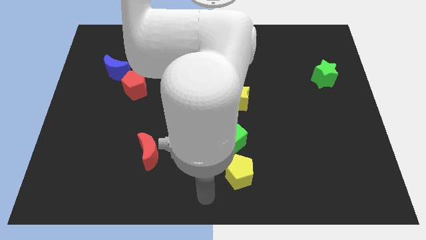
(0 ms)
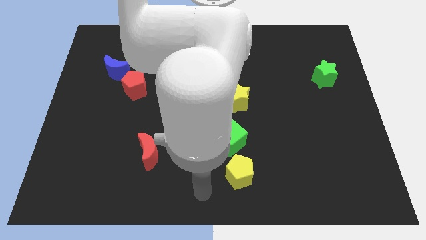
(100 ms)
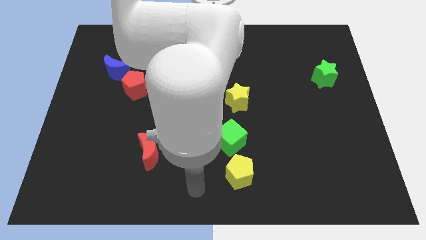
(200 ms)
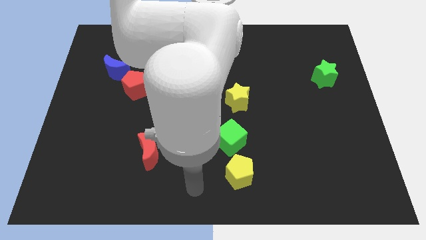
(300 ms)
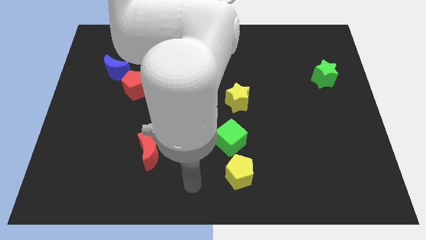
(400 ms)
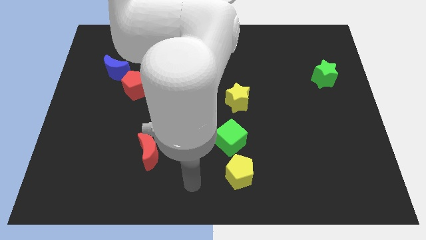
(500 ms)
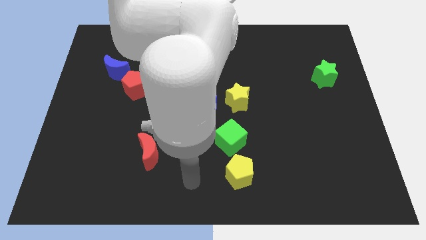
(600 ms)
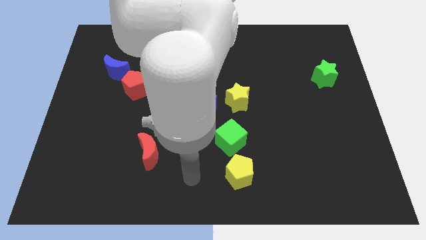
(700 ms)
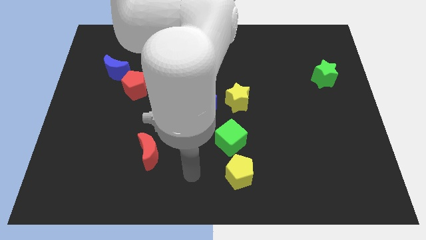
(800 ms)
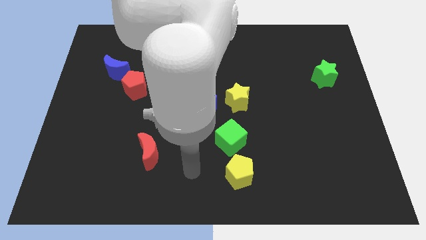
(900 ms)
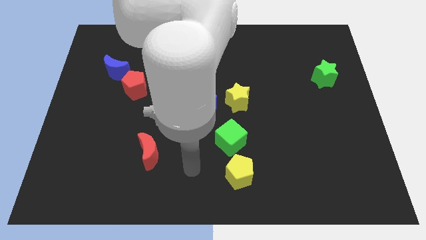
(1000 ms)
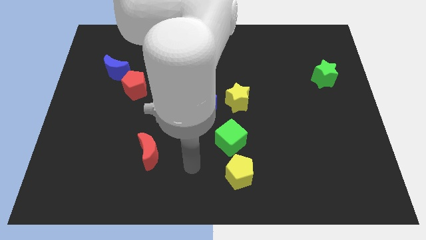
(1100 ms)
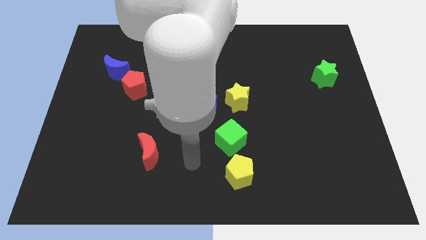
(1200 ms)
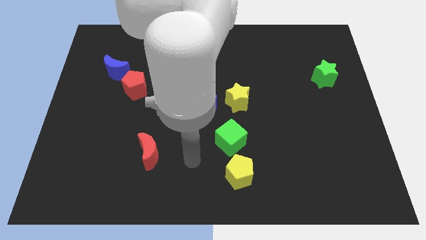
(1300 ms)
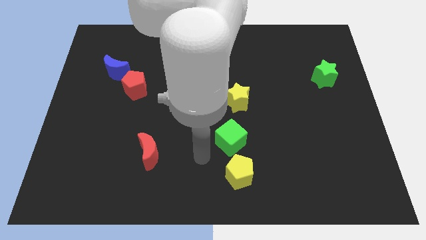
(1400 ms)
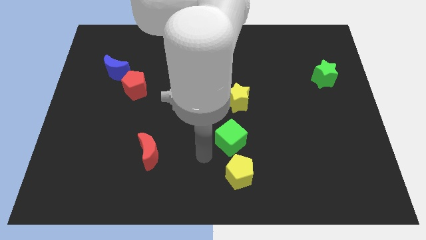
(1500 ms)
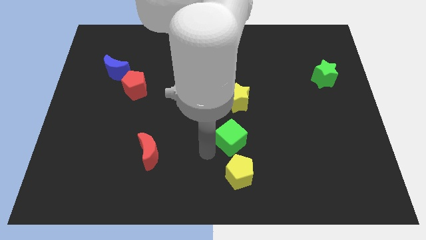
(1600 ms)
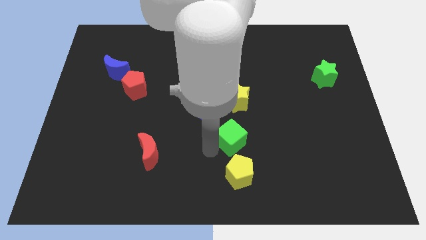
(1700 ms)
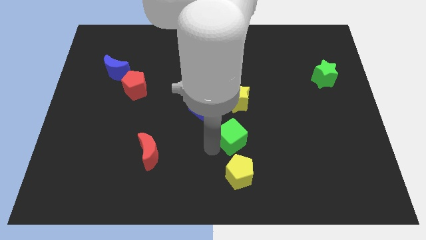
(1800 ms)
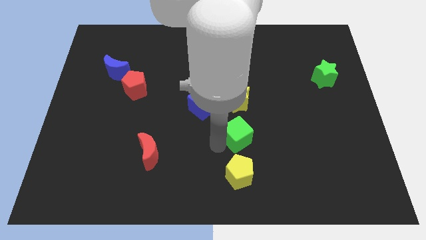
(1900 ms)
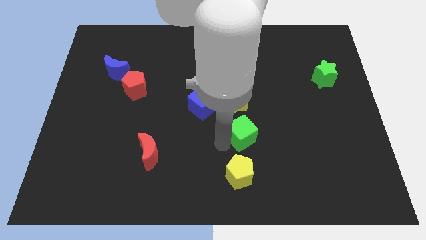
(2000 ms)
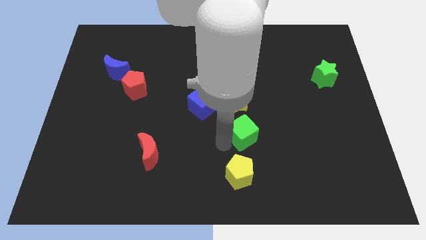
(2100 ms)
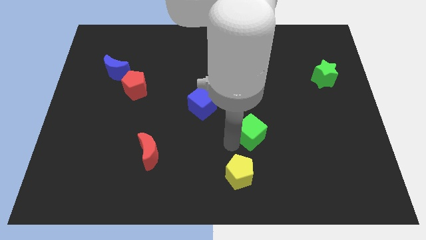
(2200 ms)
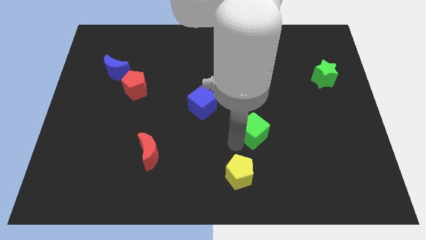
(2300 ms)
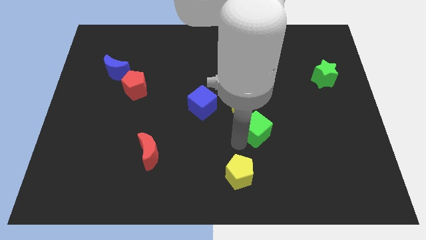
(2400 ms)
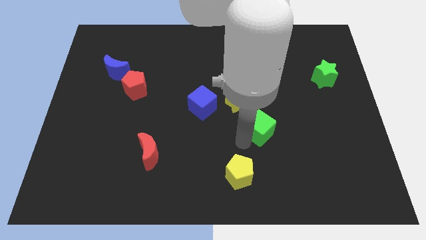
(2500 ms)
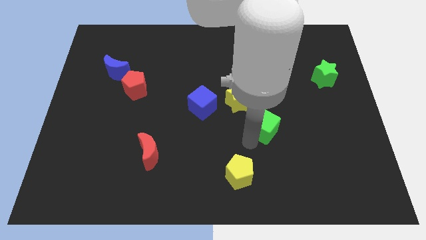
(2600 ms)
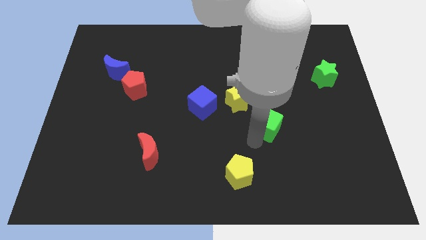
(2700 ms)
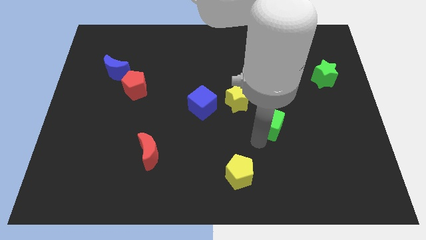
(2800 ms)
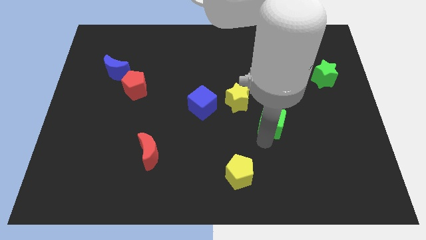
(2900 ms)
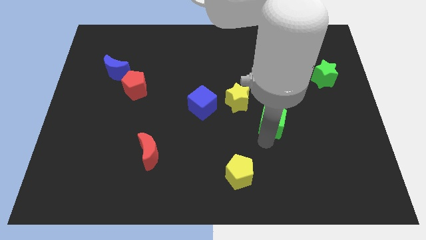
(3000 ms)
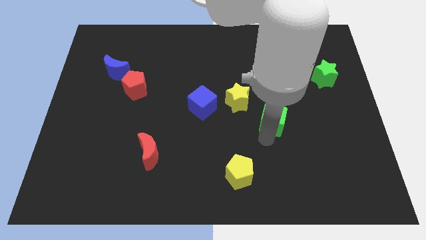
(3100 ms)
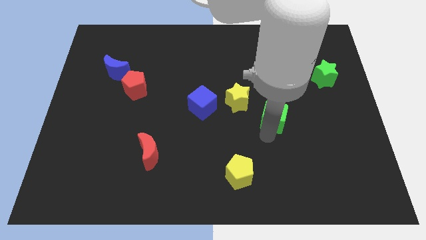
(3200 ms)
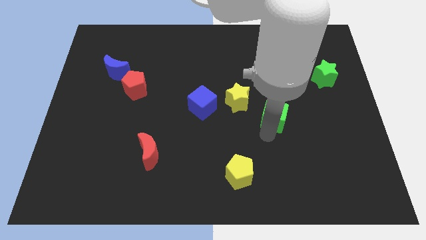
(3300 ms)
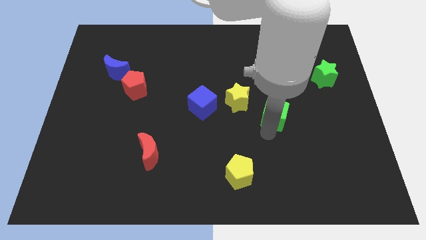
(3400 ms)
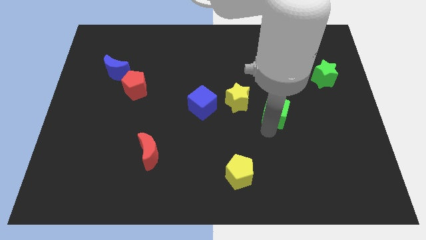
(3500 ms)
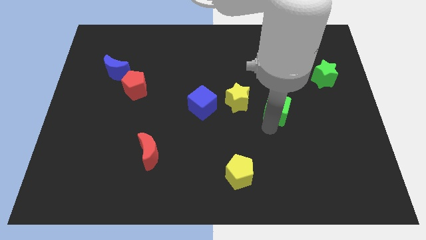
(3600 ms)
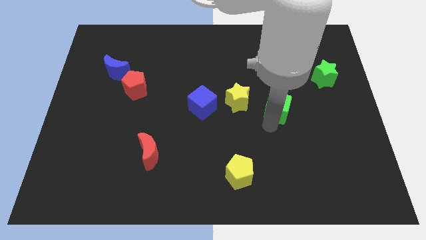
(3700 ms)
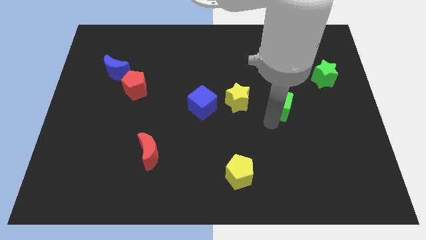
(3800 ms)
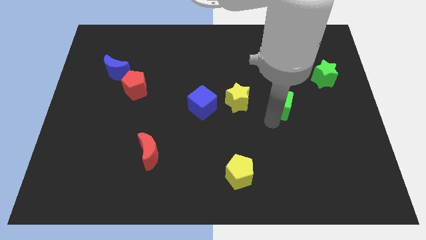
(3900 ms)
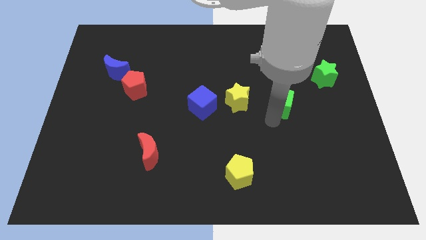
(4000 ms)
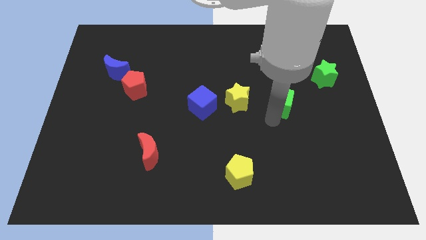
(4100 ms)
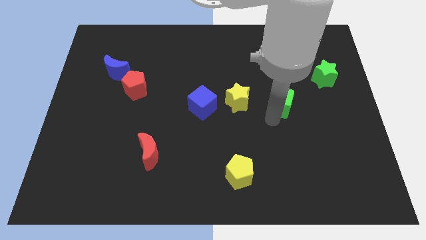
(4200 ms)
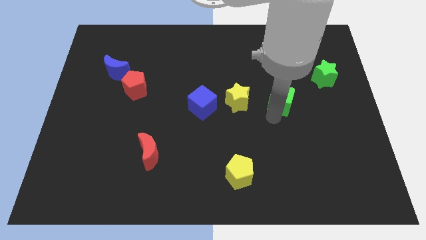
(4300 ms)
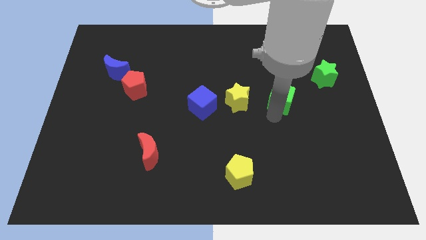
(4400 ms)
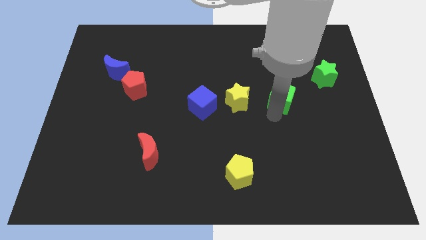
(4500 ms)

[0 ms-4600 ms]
place the green cube to the right of the yellow star

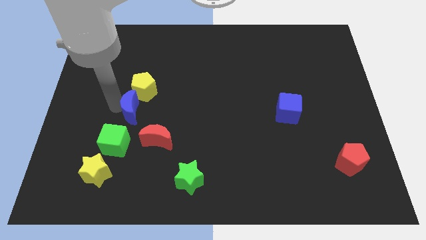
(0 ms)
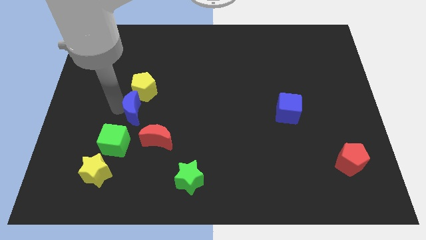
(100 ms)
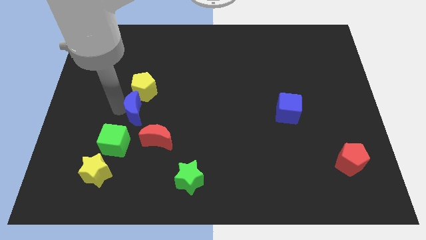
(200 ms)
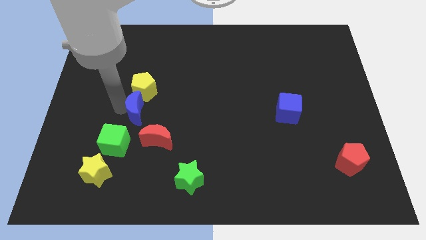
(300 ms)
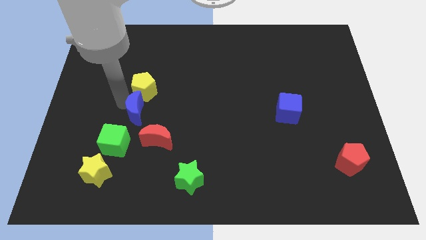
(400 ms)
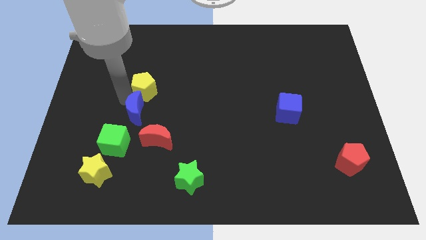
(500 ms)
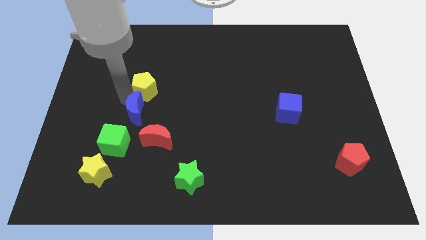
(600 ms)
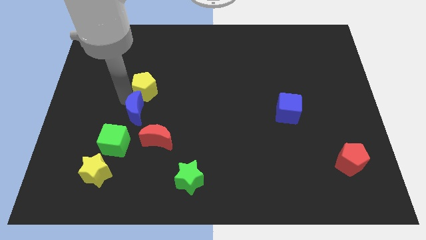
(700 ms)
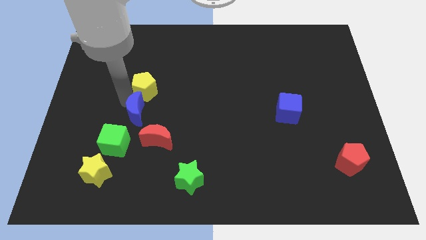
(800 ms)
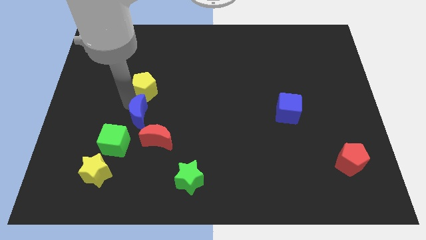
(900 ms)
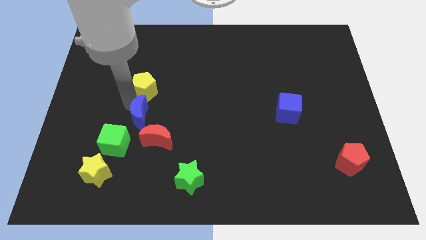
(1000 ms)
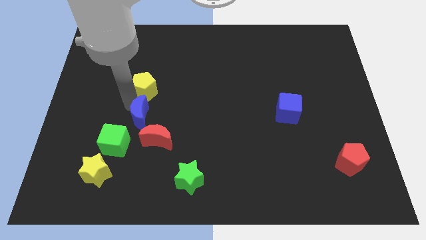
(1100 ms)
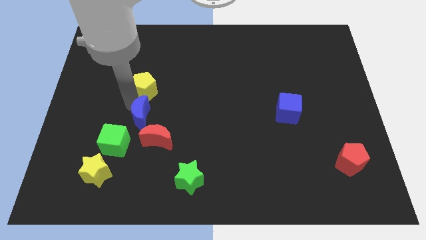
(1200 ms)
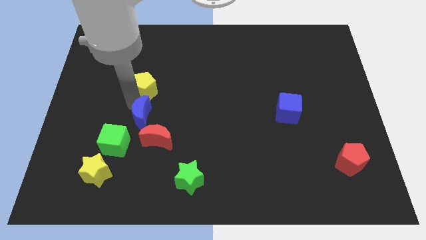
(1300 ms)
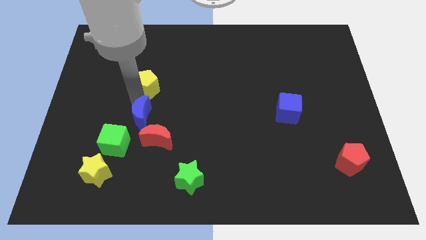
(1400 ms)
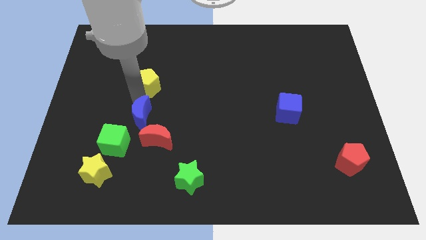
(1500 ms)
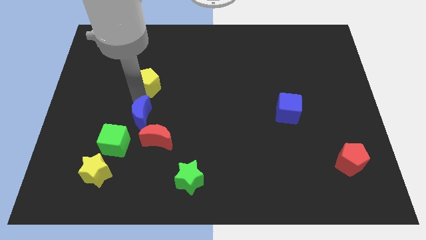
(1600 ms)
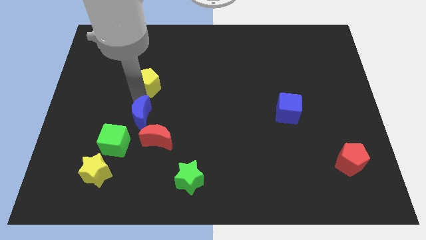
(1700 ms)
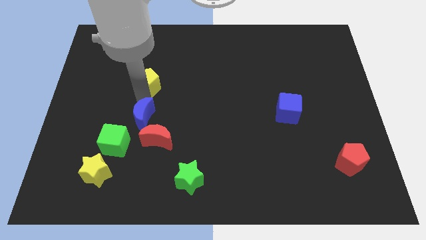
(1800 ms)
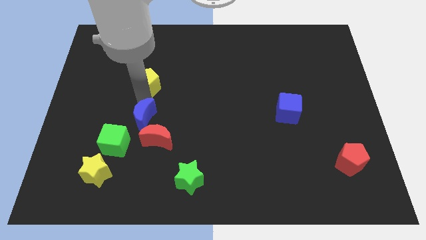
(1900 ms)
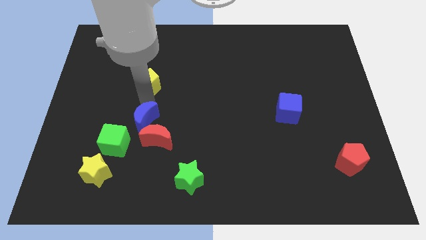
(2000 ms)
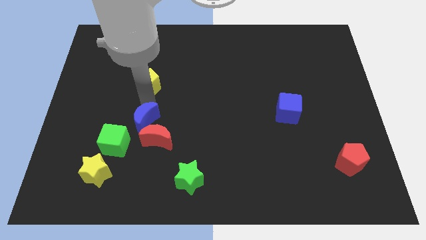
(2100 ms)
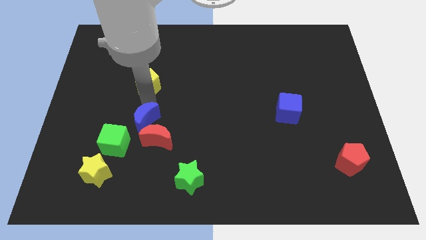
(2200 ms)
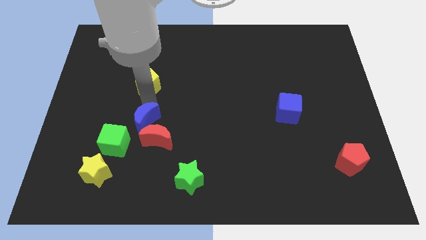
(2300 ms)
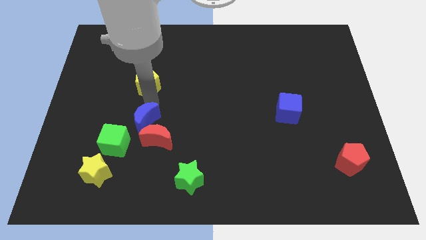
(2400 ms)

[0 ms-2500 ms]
move the blue crescent above the red crescent

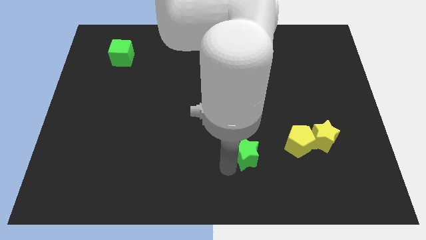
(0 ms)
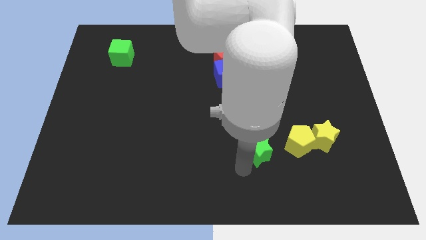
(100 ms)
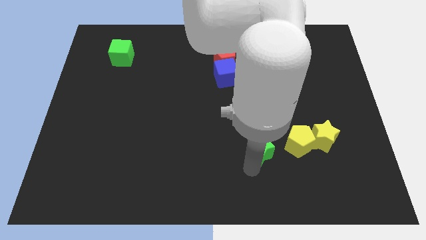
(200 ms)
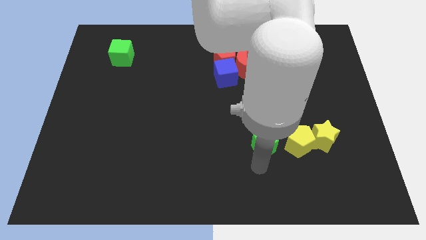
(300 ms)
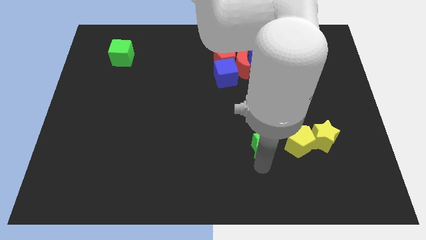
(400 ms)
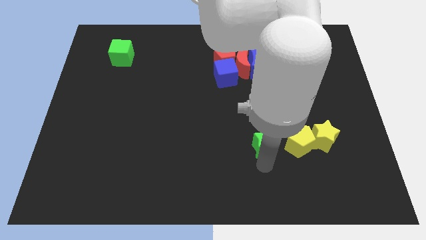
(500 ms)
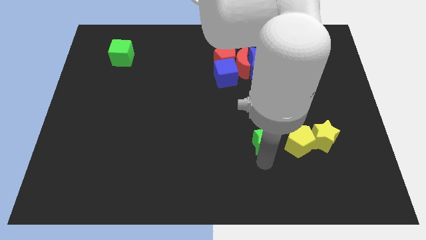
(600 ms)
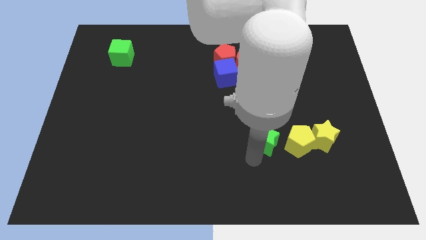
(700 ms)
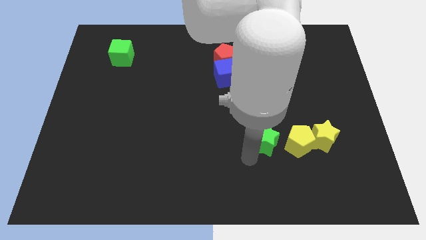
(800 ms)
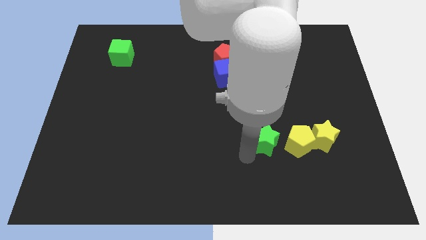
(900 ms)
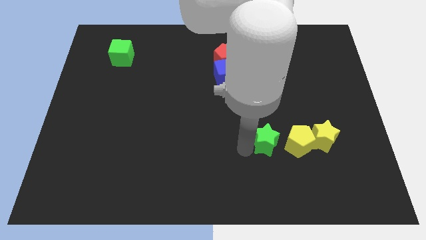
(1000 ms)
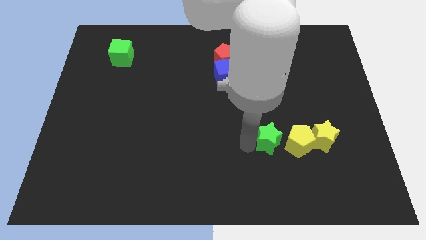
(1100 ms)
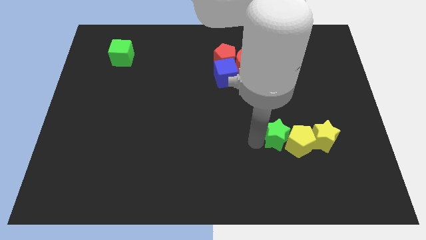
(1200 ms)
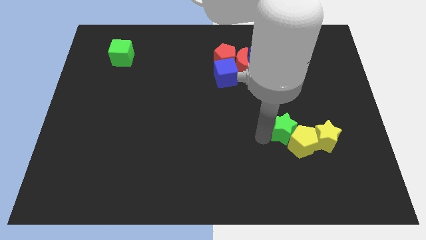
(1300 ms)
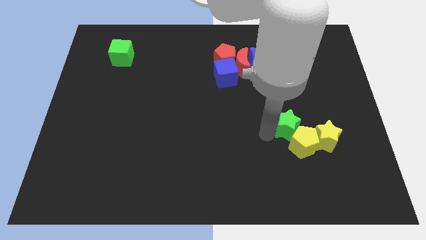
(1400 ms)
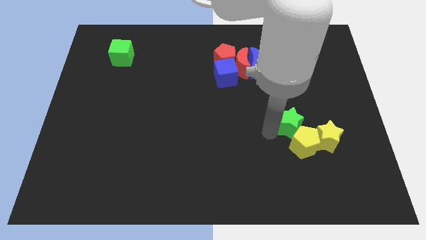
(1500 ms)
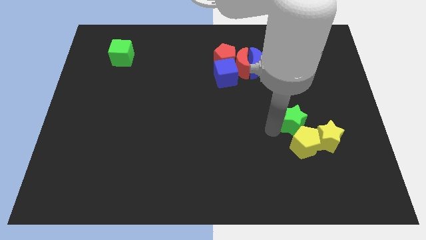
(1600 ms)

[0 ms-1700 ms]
place the green star to the top of the yellow pentagon
